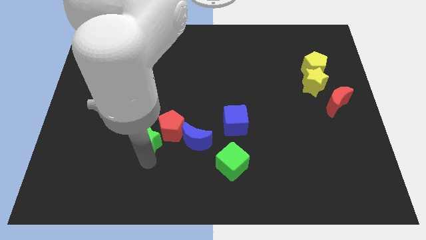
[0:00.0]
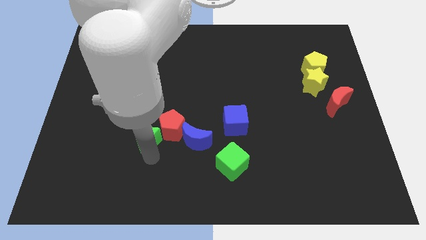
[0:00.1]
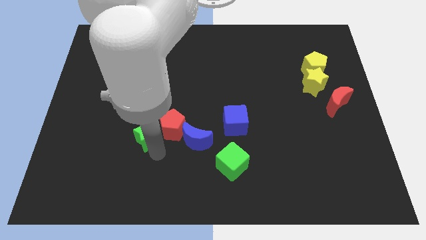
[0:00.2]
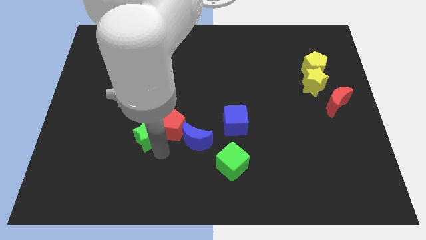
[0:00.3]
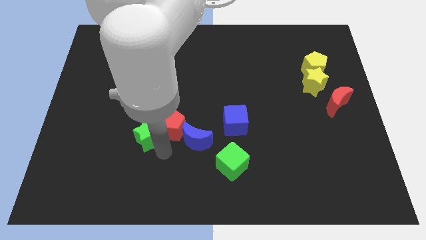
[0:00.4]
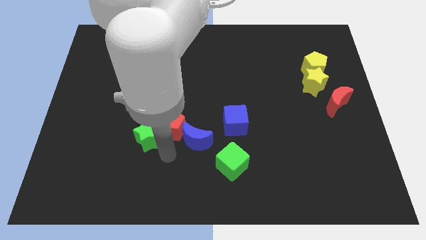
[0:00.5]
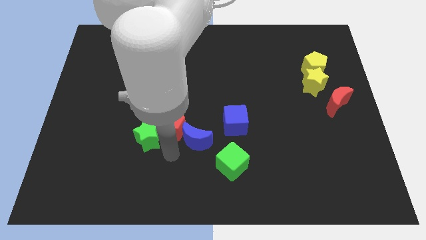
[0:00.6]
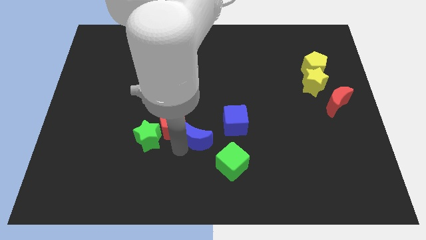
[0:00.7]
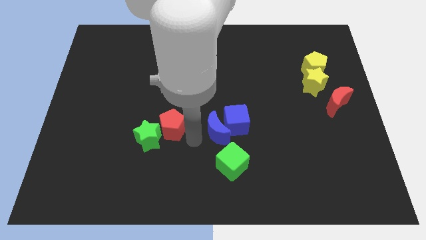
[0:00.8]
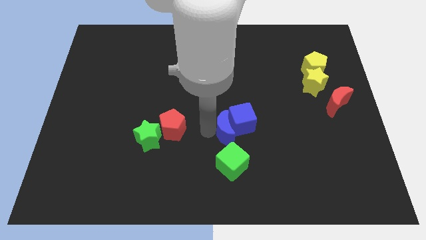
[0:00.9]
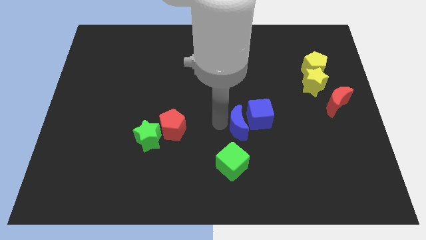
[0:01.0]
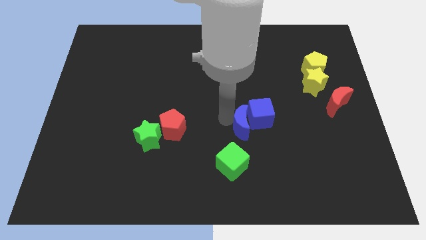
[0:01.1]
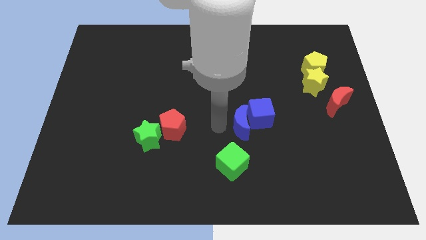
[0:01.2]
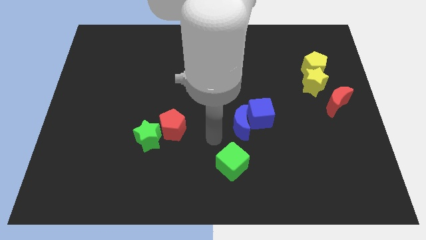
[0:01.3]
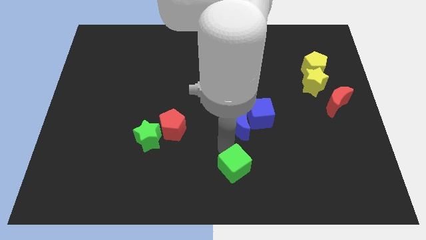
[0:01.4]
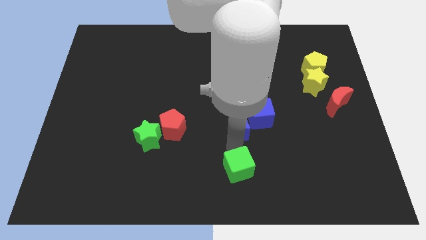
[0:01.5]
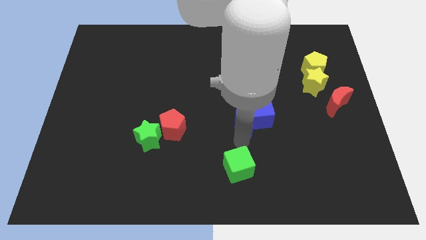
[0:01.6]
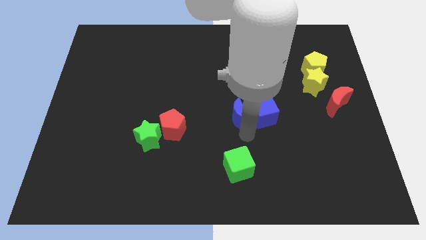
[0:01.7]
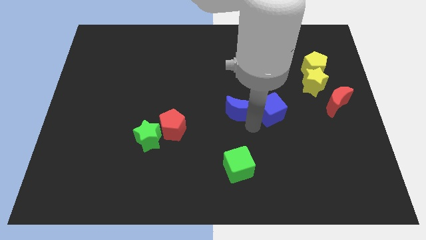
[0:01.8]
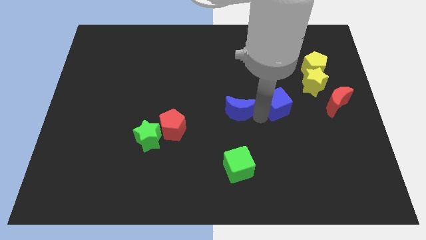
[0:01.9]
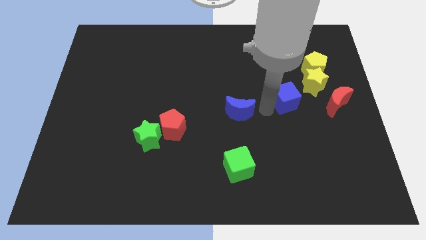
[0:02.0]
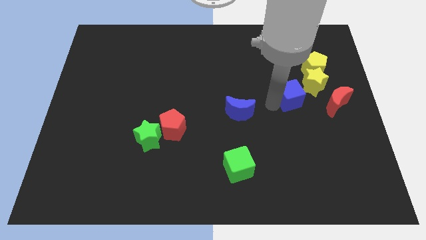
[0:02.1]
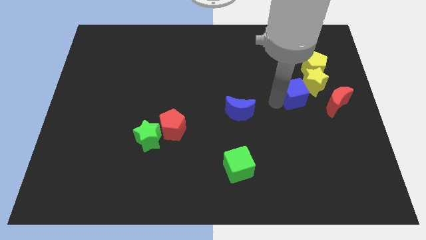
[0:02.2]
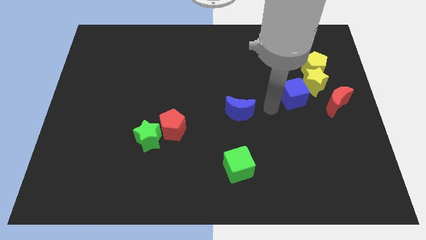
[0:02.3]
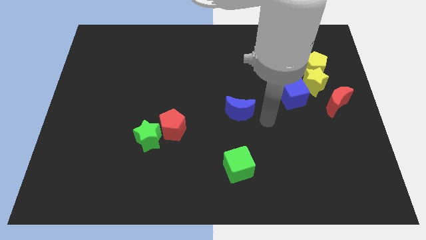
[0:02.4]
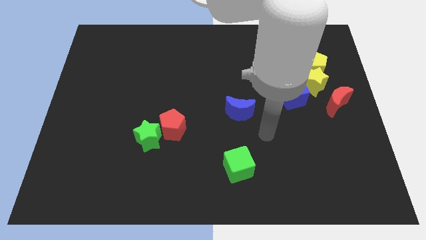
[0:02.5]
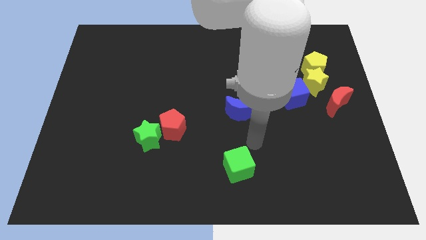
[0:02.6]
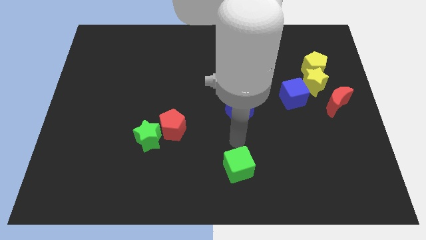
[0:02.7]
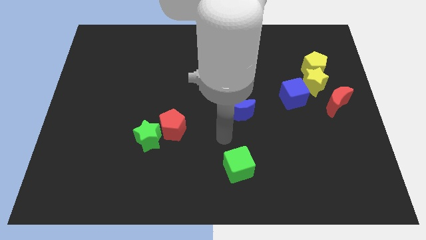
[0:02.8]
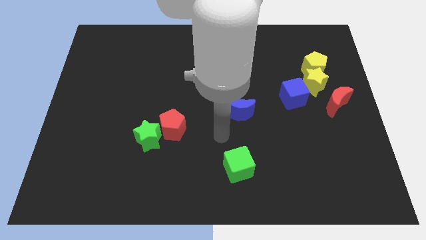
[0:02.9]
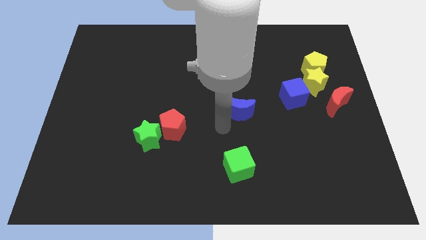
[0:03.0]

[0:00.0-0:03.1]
separate blue blocks from red pentagon

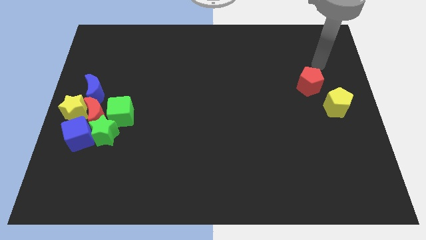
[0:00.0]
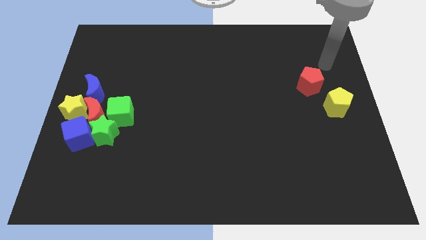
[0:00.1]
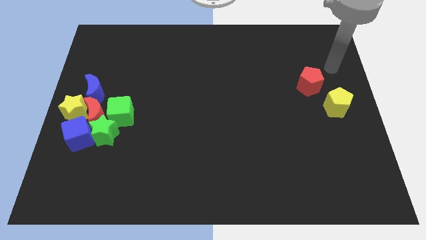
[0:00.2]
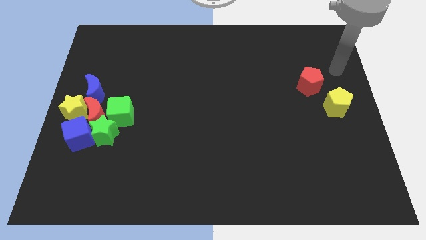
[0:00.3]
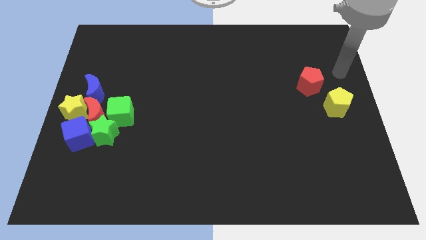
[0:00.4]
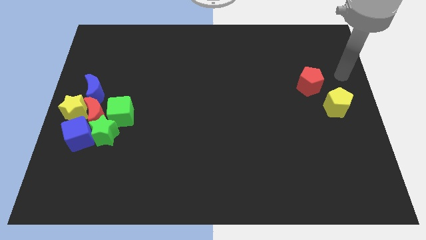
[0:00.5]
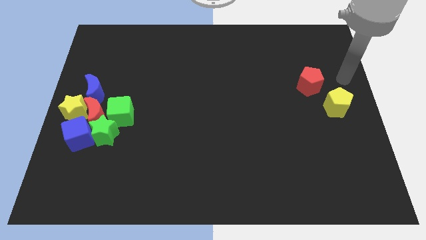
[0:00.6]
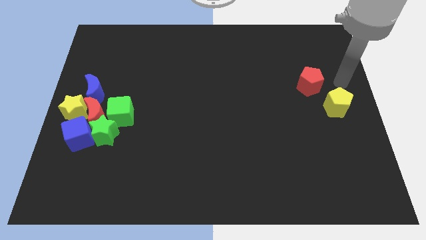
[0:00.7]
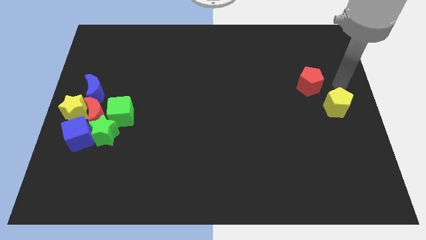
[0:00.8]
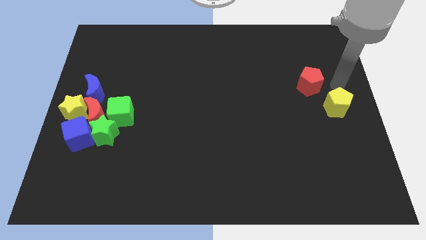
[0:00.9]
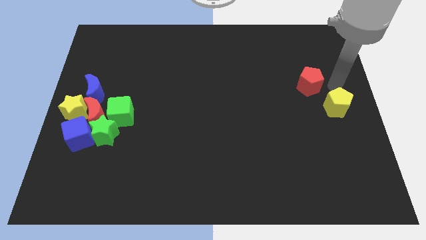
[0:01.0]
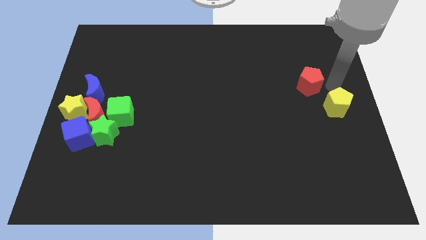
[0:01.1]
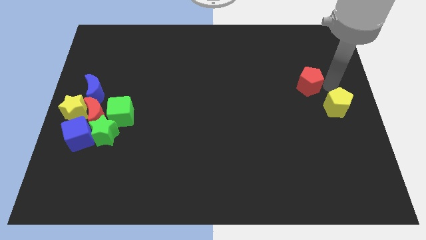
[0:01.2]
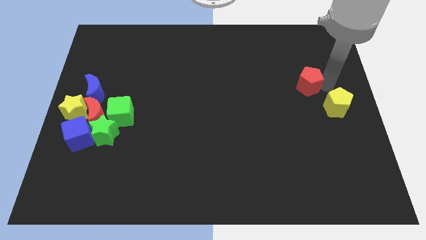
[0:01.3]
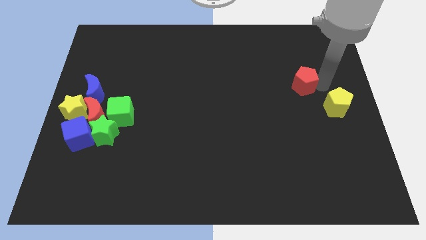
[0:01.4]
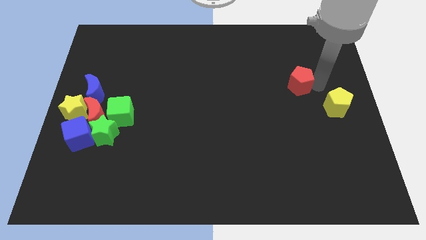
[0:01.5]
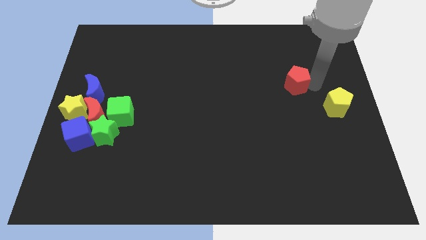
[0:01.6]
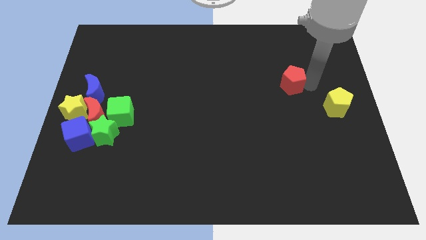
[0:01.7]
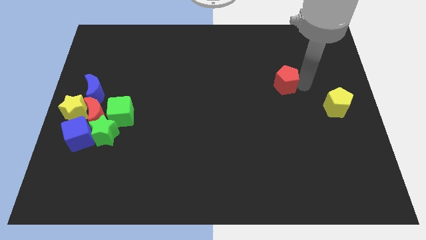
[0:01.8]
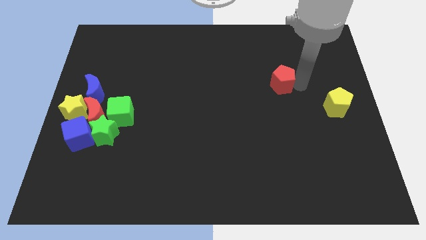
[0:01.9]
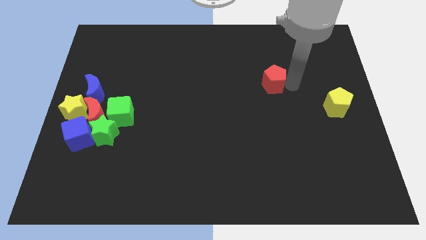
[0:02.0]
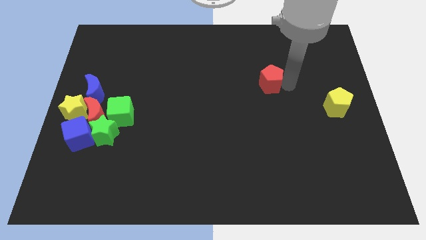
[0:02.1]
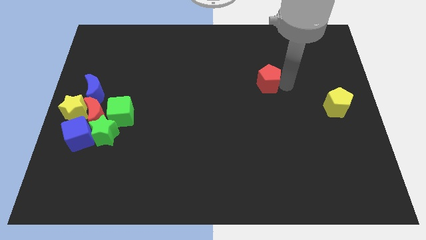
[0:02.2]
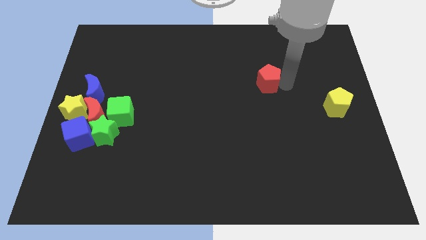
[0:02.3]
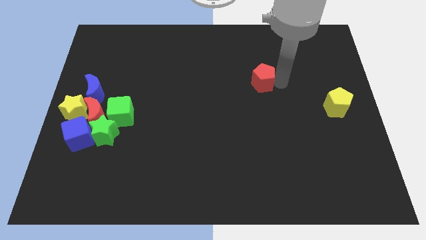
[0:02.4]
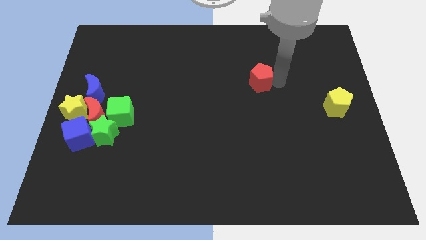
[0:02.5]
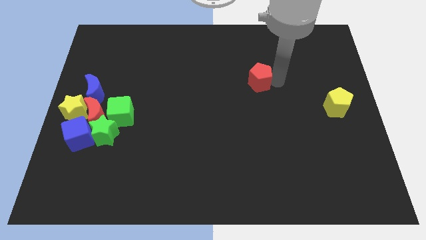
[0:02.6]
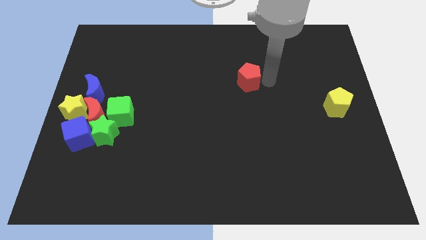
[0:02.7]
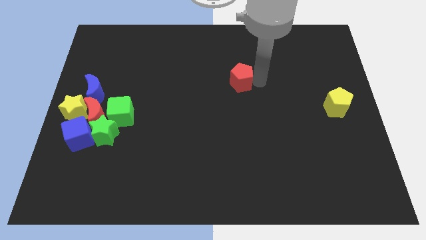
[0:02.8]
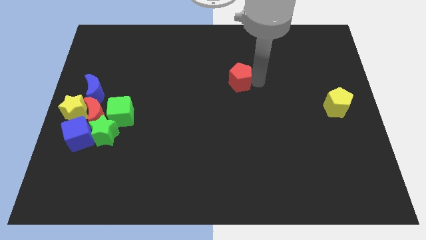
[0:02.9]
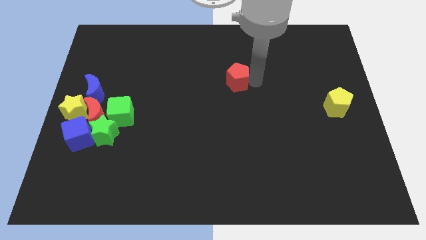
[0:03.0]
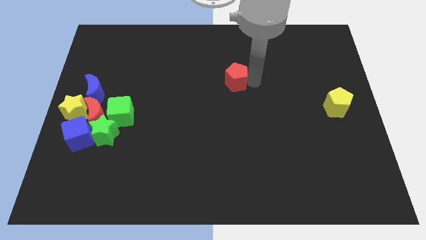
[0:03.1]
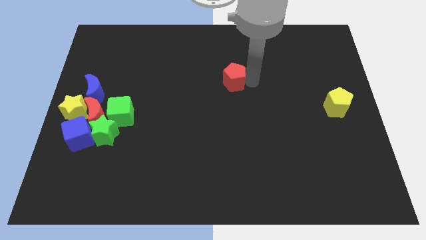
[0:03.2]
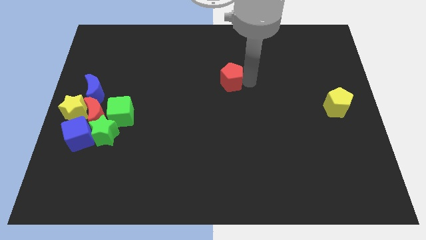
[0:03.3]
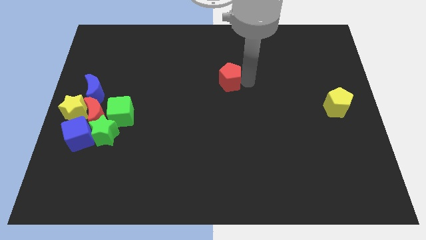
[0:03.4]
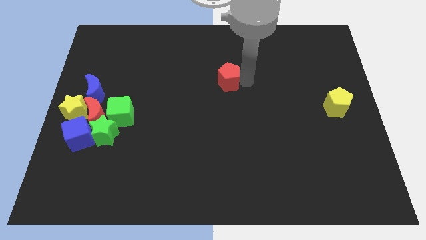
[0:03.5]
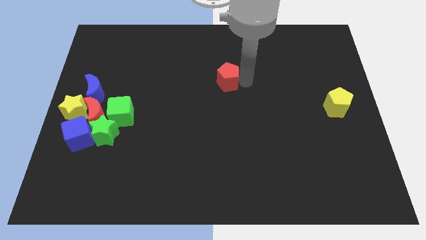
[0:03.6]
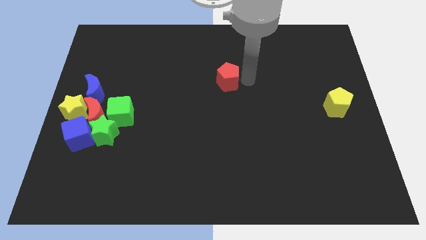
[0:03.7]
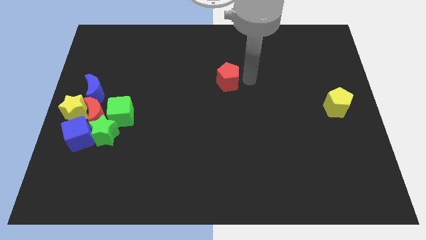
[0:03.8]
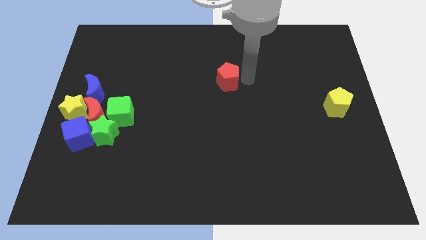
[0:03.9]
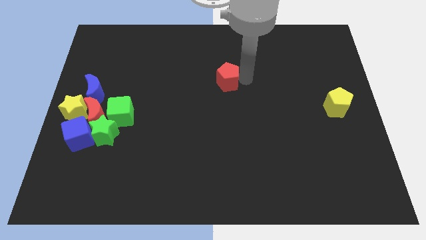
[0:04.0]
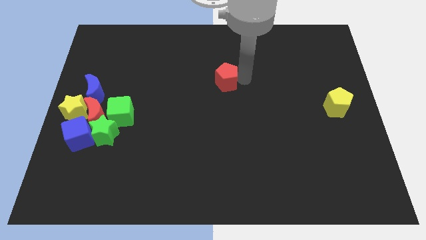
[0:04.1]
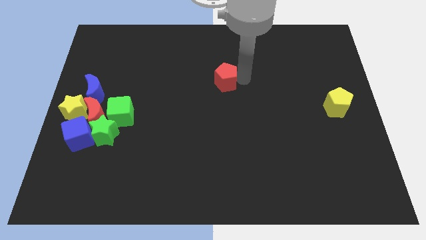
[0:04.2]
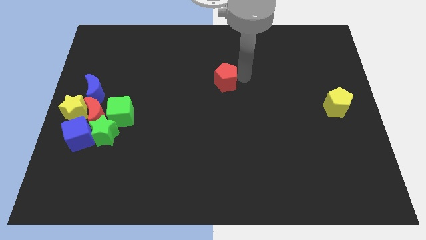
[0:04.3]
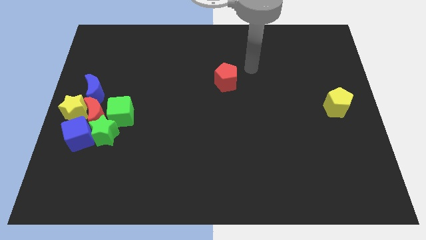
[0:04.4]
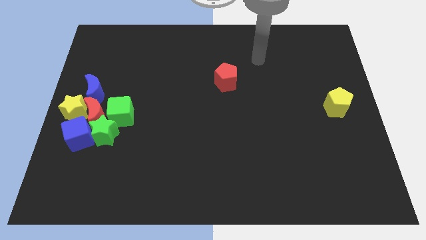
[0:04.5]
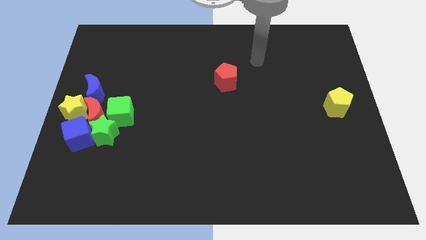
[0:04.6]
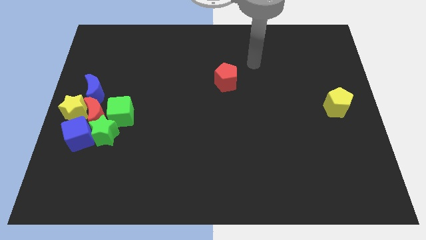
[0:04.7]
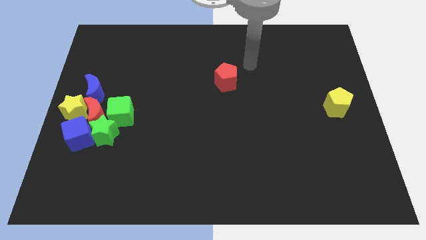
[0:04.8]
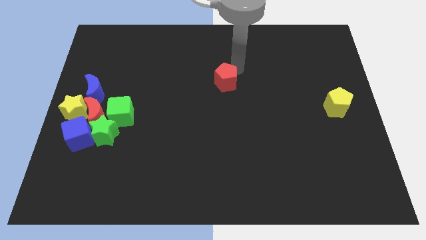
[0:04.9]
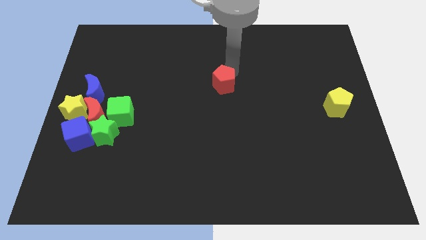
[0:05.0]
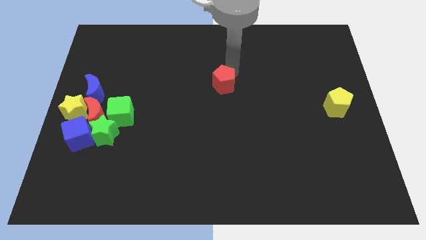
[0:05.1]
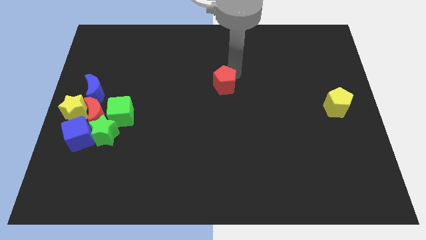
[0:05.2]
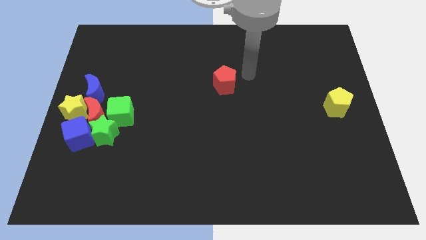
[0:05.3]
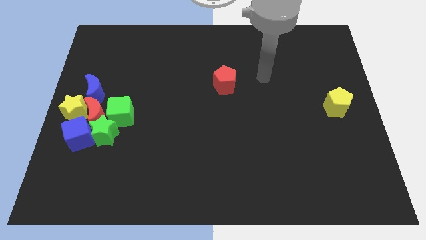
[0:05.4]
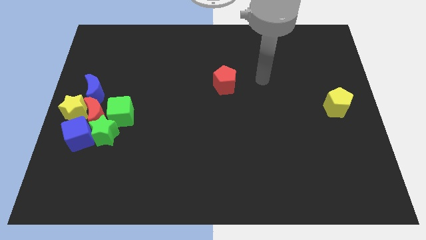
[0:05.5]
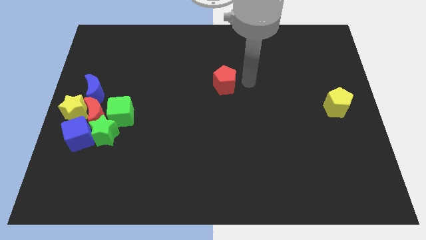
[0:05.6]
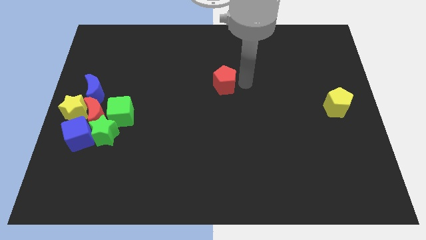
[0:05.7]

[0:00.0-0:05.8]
push the red pentagon towards the center of the board

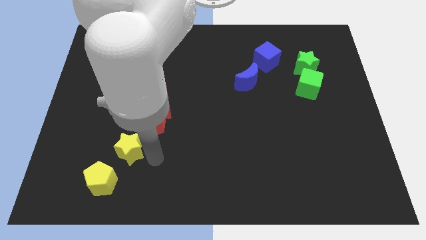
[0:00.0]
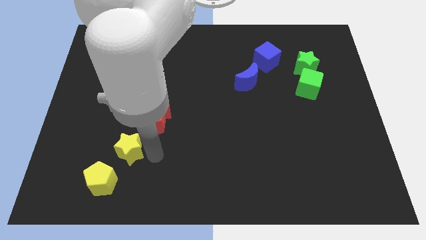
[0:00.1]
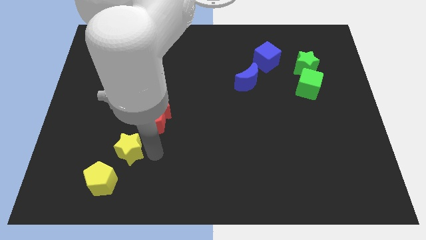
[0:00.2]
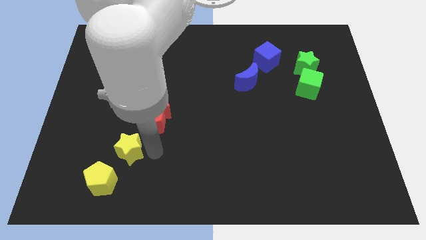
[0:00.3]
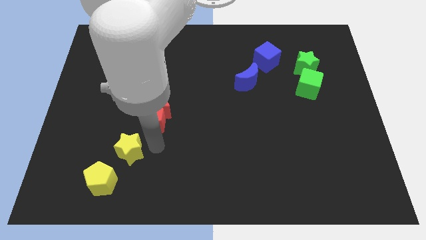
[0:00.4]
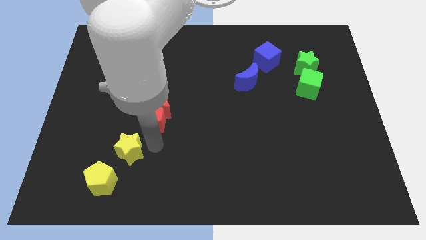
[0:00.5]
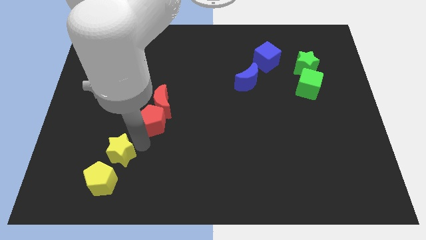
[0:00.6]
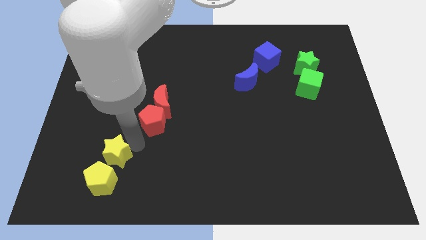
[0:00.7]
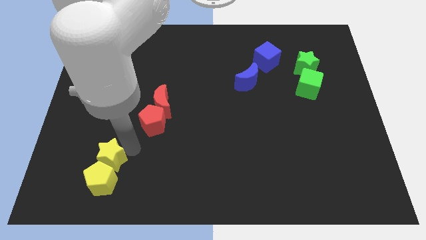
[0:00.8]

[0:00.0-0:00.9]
place yellow star above yellow pentagon
